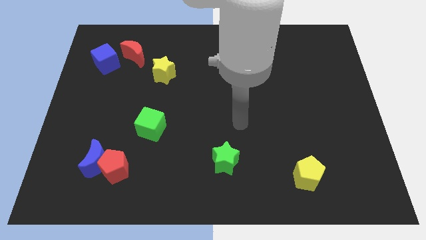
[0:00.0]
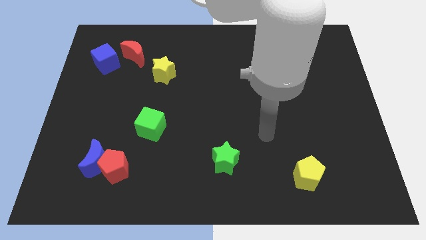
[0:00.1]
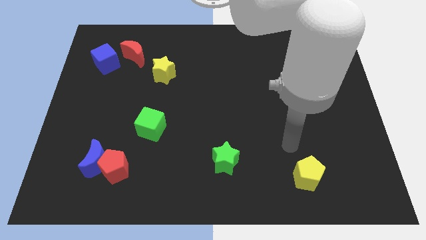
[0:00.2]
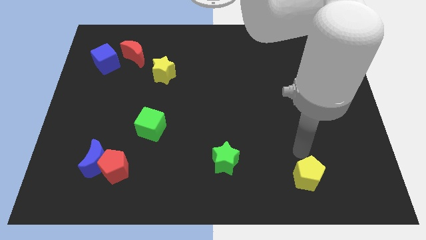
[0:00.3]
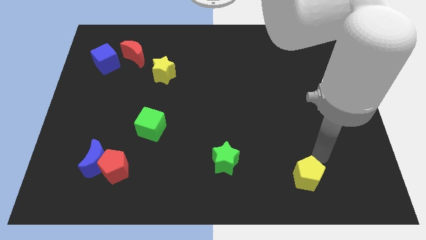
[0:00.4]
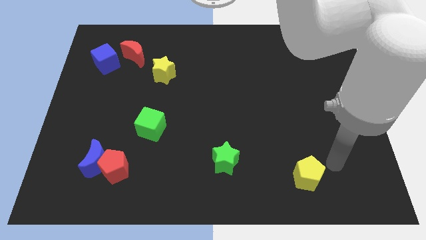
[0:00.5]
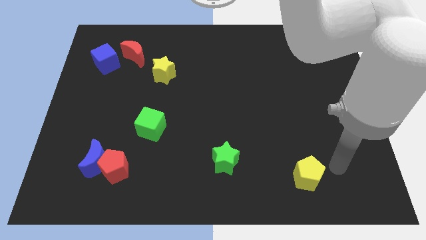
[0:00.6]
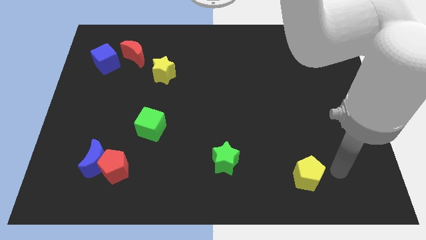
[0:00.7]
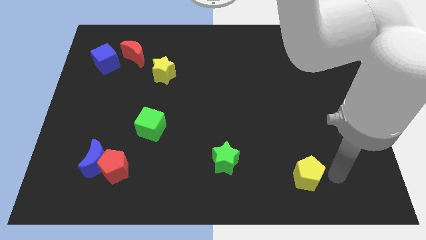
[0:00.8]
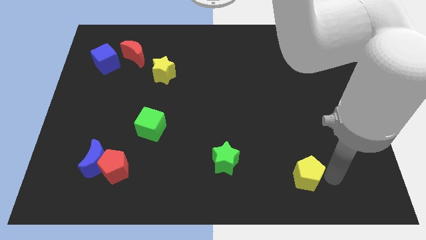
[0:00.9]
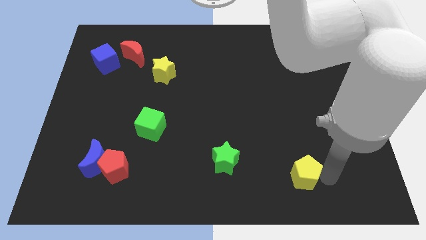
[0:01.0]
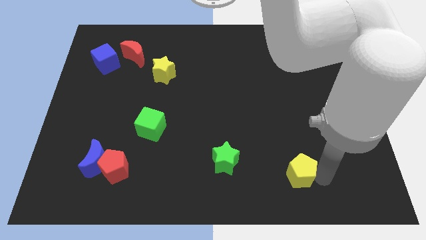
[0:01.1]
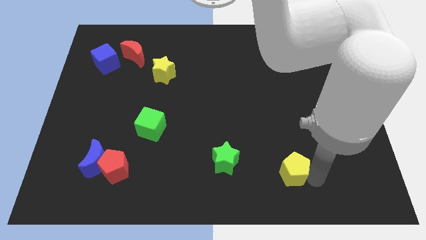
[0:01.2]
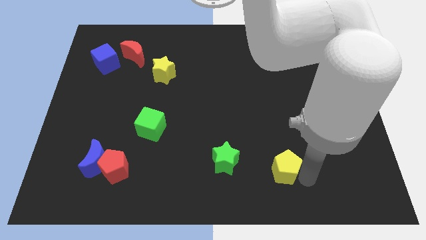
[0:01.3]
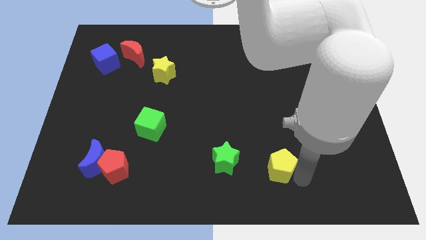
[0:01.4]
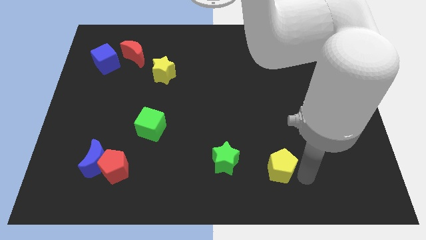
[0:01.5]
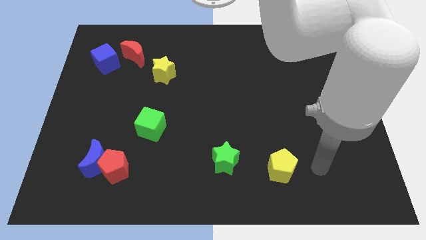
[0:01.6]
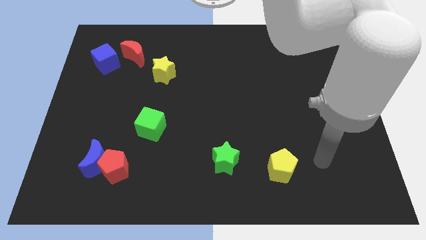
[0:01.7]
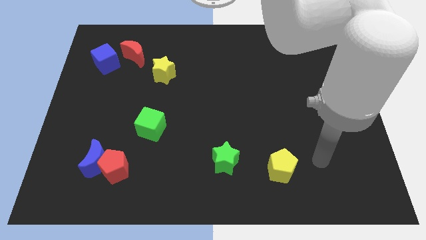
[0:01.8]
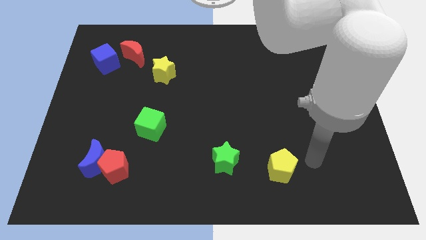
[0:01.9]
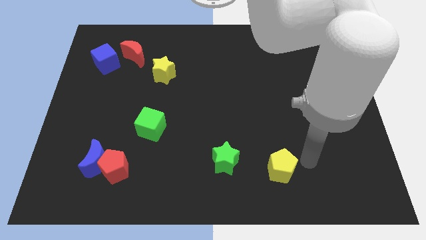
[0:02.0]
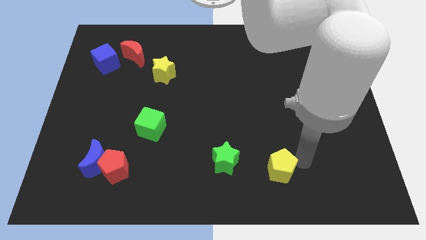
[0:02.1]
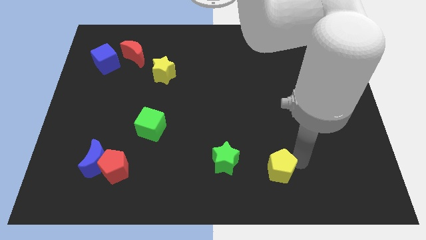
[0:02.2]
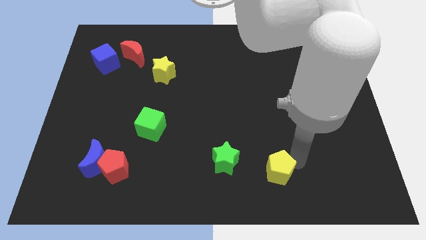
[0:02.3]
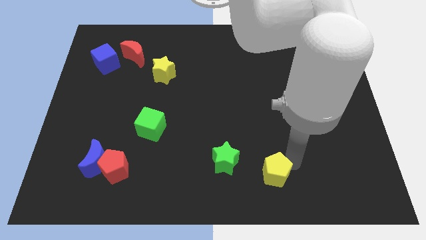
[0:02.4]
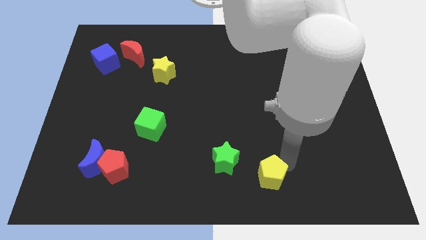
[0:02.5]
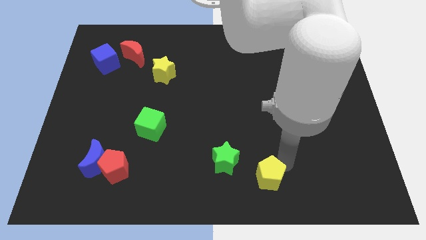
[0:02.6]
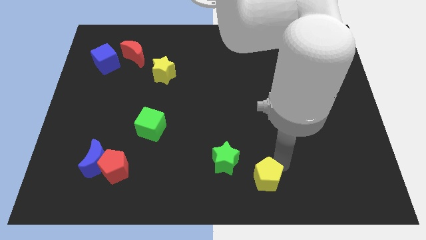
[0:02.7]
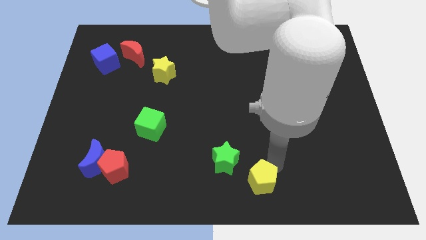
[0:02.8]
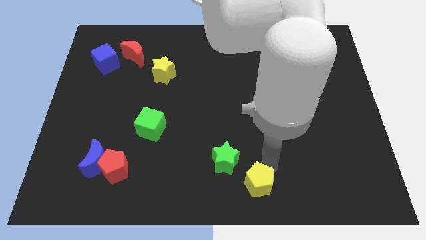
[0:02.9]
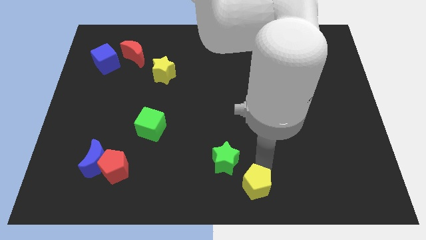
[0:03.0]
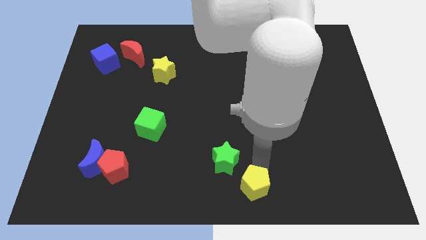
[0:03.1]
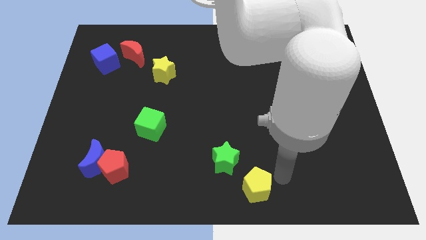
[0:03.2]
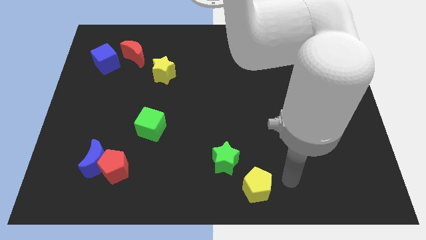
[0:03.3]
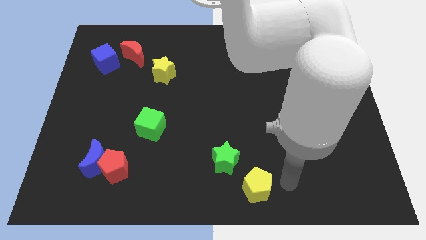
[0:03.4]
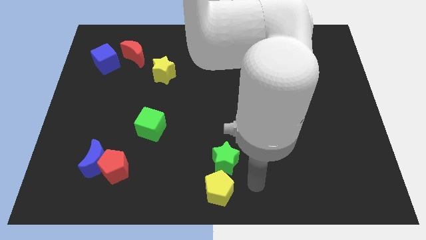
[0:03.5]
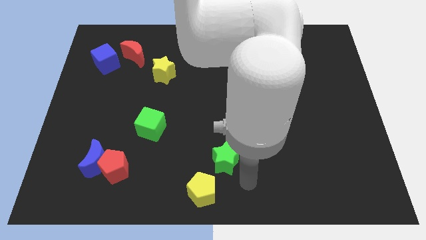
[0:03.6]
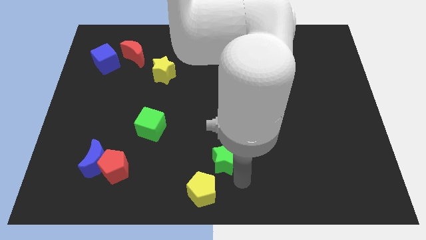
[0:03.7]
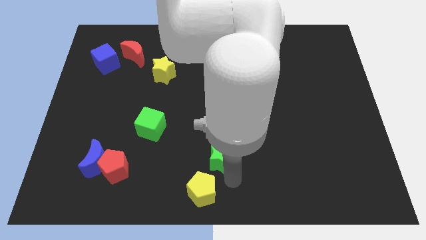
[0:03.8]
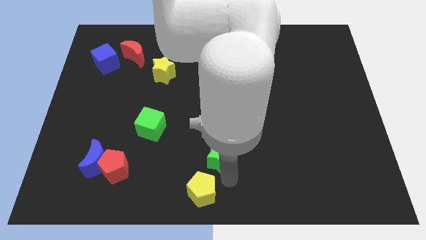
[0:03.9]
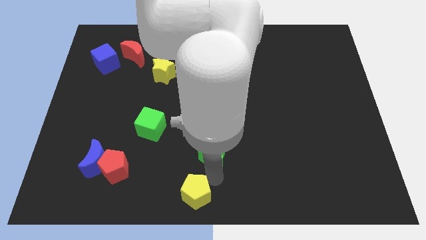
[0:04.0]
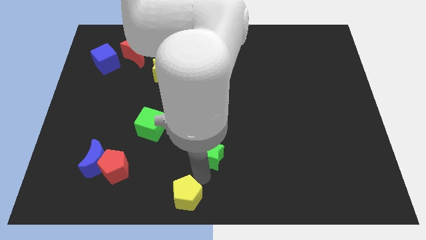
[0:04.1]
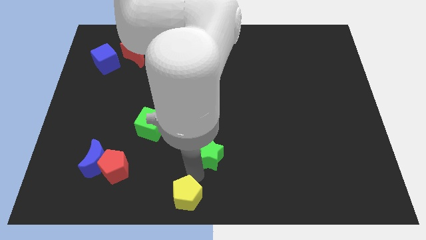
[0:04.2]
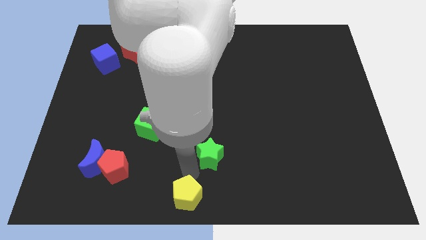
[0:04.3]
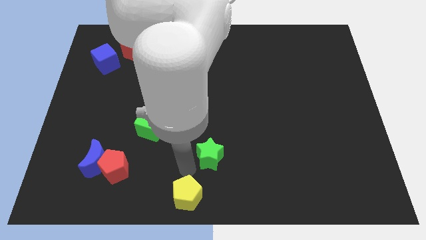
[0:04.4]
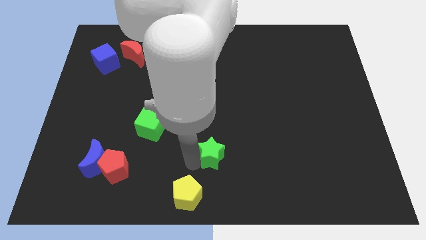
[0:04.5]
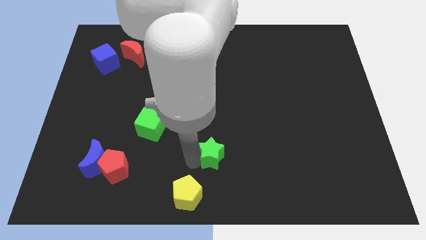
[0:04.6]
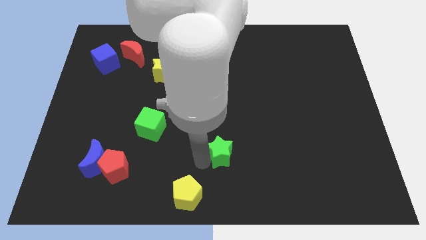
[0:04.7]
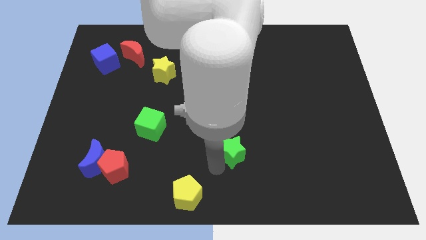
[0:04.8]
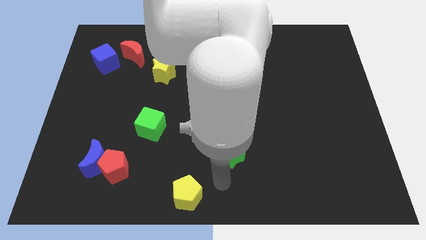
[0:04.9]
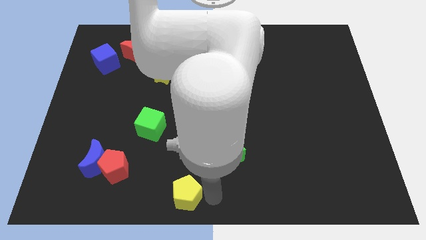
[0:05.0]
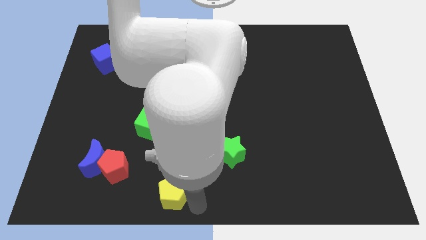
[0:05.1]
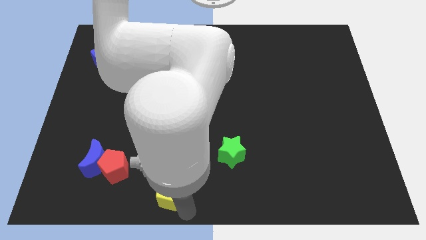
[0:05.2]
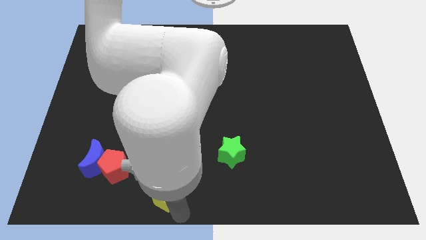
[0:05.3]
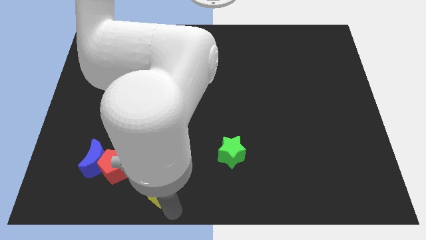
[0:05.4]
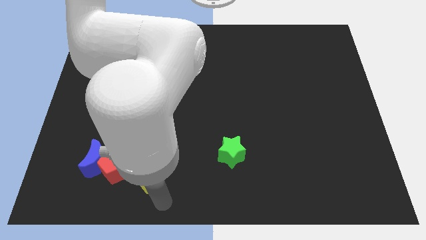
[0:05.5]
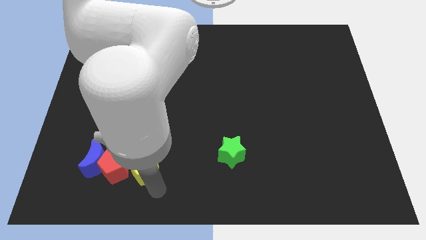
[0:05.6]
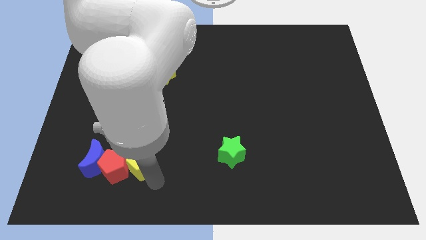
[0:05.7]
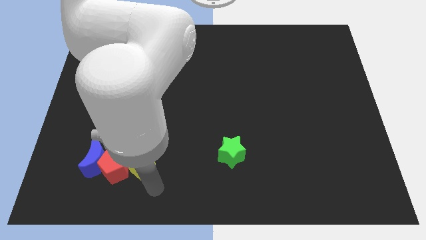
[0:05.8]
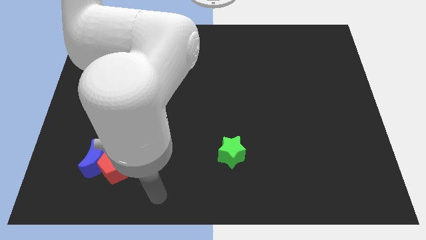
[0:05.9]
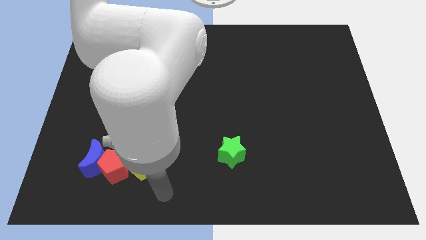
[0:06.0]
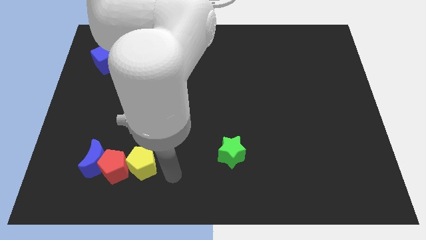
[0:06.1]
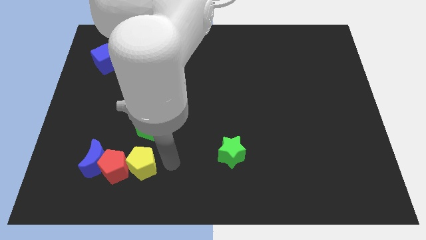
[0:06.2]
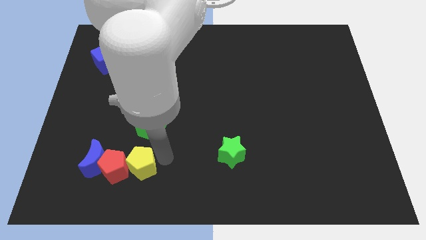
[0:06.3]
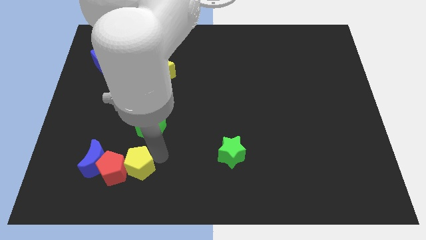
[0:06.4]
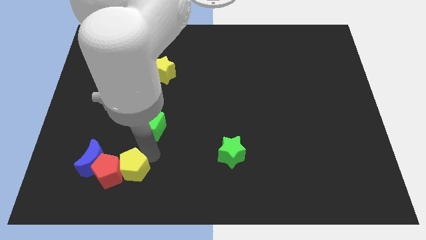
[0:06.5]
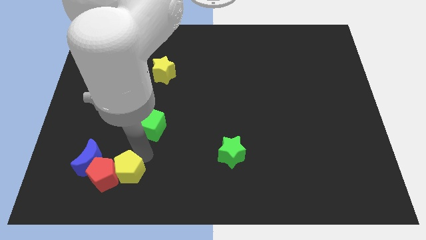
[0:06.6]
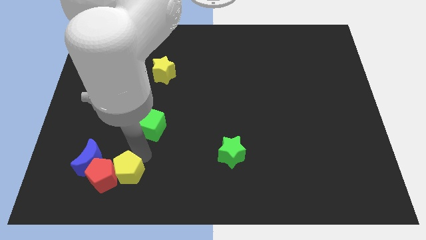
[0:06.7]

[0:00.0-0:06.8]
slide the yellow pentagon to the blue moon

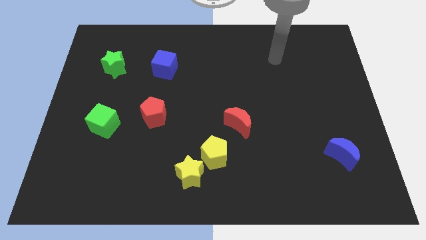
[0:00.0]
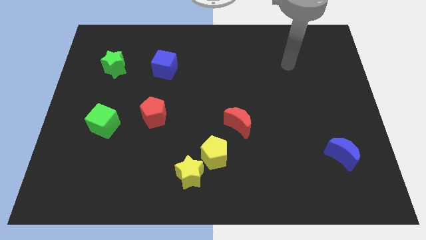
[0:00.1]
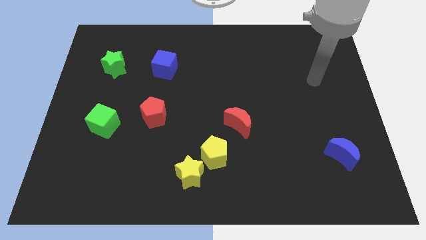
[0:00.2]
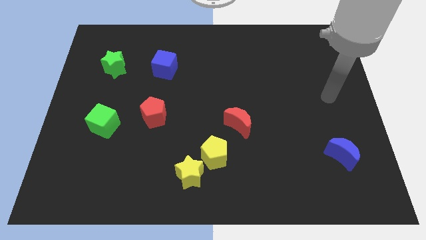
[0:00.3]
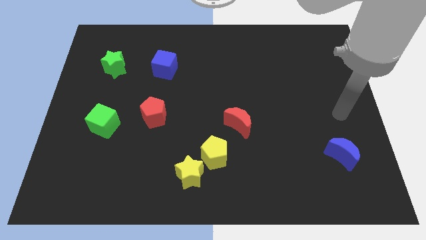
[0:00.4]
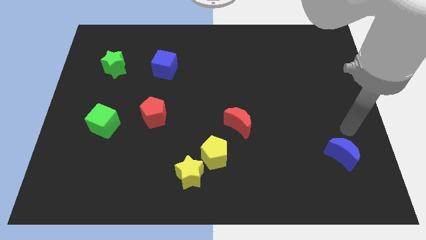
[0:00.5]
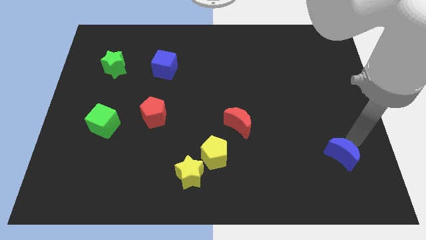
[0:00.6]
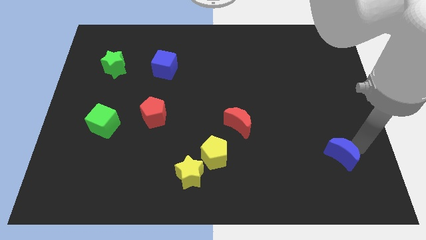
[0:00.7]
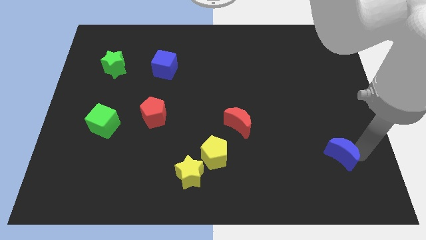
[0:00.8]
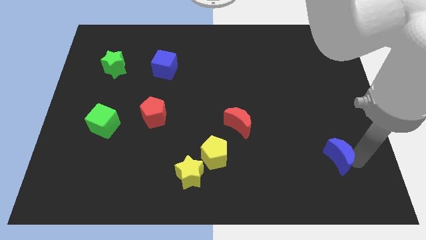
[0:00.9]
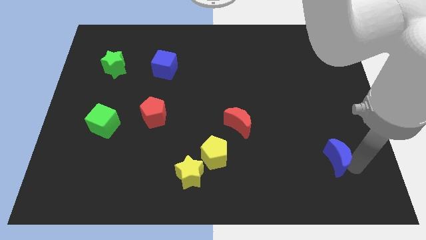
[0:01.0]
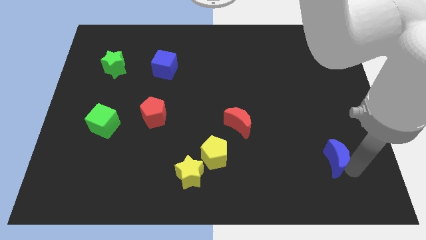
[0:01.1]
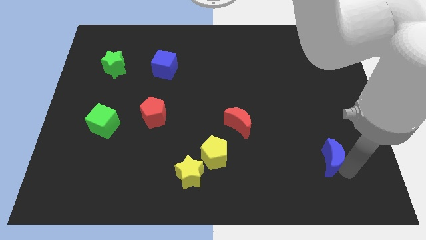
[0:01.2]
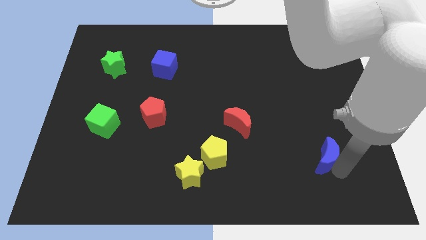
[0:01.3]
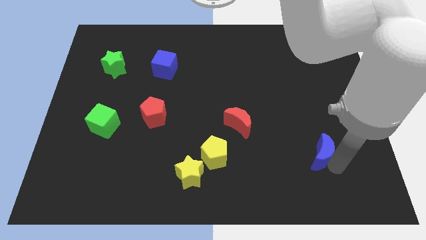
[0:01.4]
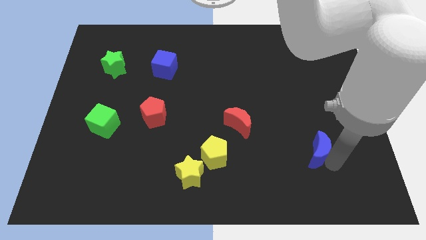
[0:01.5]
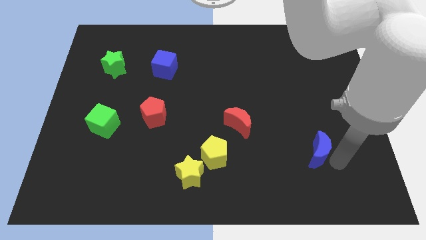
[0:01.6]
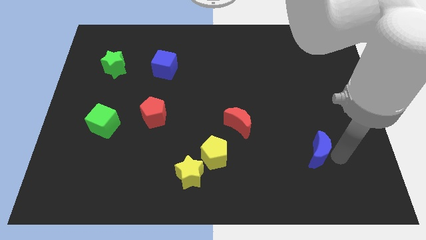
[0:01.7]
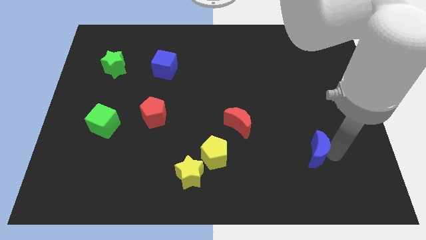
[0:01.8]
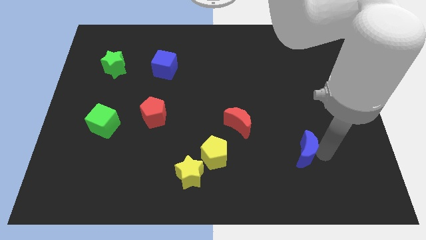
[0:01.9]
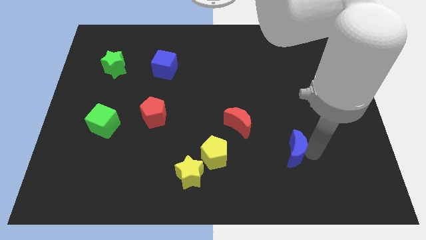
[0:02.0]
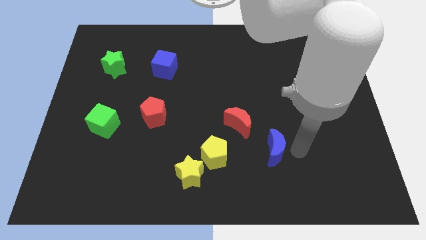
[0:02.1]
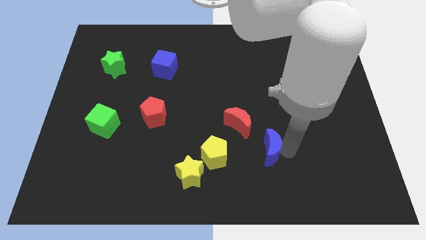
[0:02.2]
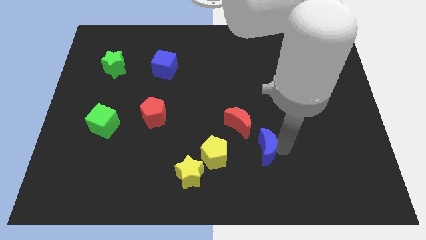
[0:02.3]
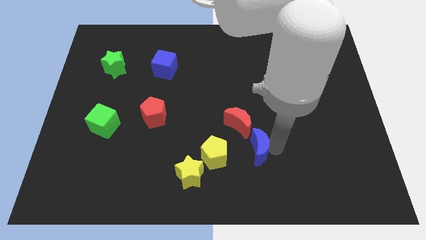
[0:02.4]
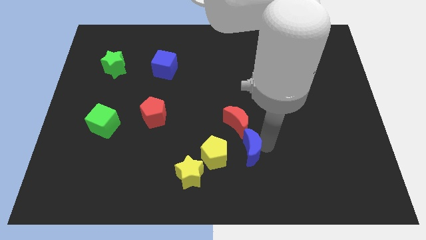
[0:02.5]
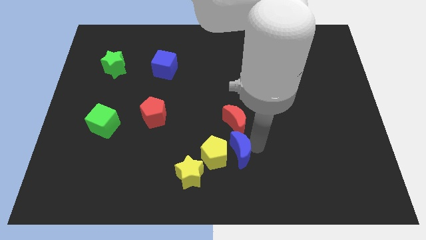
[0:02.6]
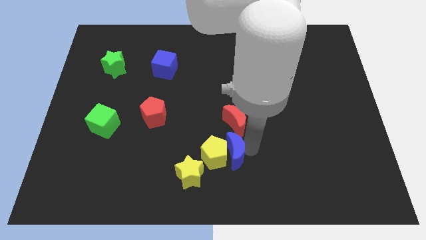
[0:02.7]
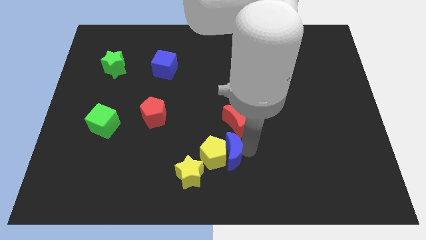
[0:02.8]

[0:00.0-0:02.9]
push the blue moon to the yellow pentagon
